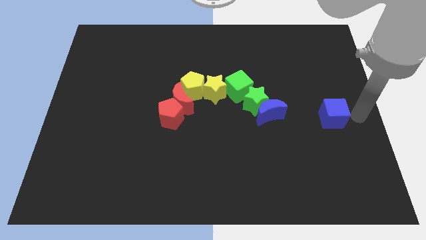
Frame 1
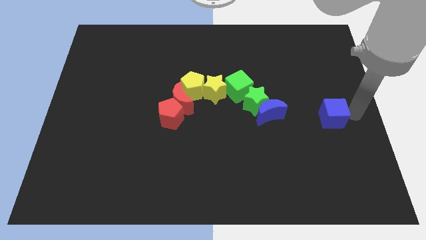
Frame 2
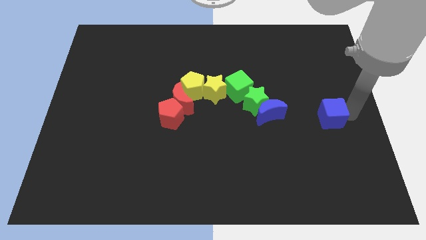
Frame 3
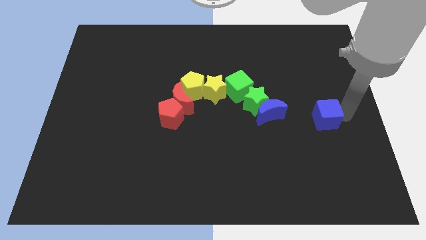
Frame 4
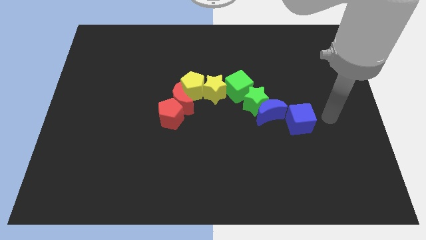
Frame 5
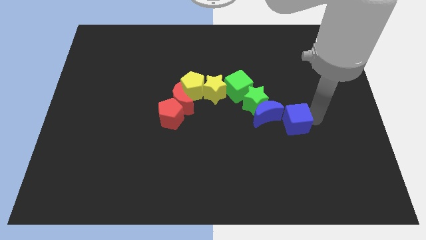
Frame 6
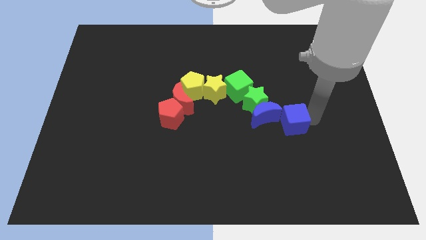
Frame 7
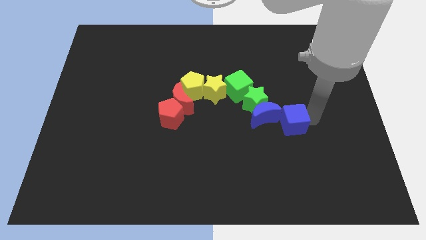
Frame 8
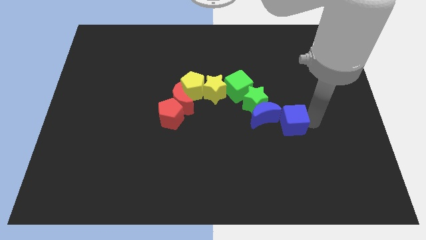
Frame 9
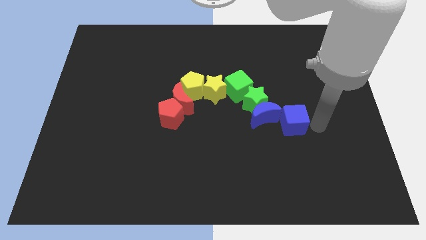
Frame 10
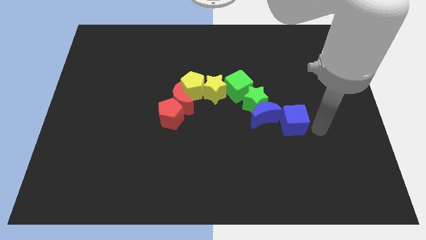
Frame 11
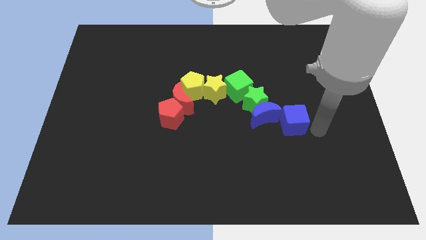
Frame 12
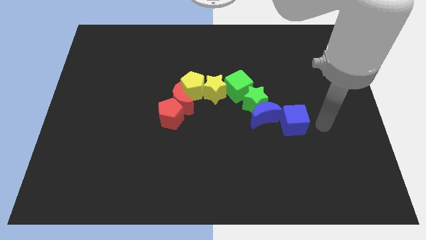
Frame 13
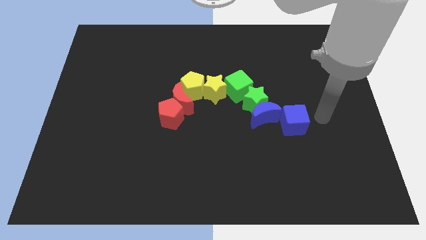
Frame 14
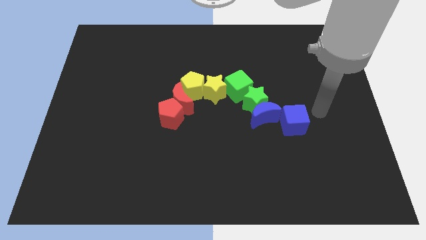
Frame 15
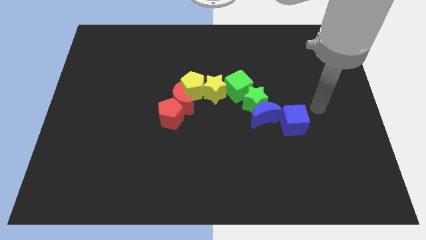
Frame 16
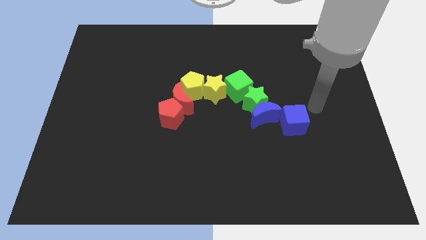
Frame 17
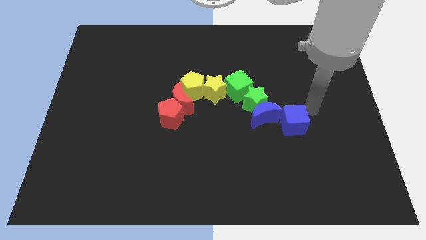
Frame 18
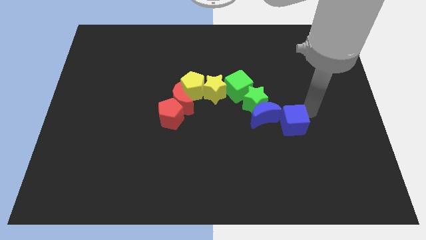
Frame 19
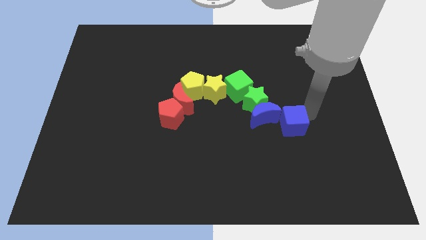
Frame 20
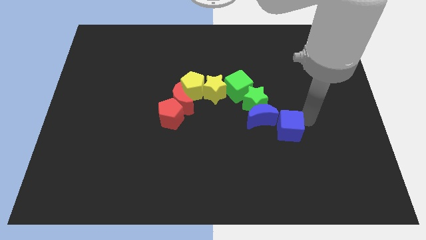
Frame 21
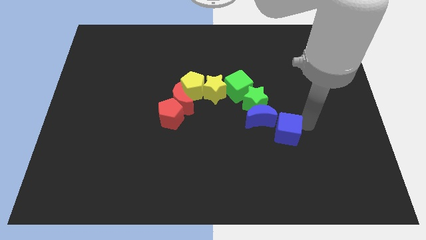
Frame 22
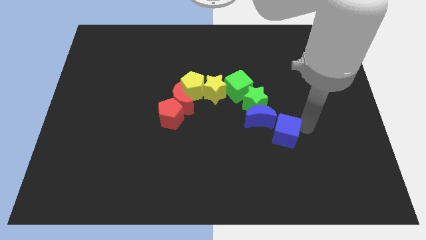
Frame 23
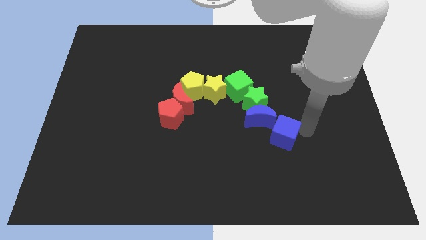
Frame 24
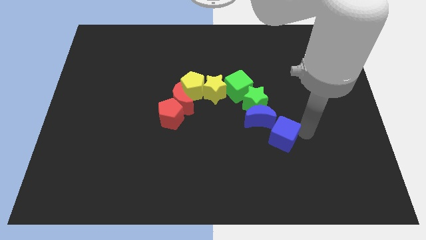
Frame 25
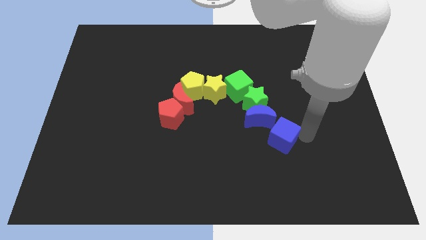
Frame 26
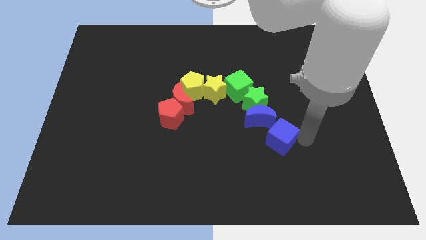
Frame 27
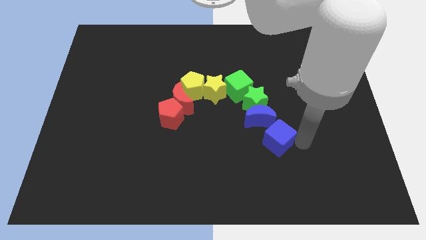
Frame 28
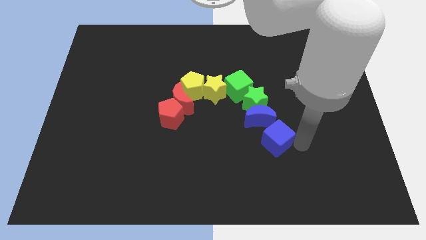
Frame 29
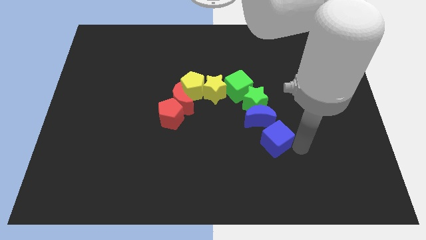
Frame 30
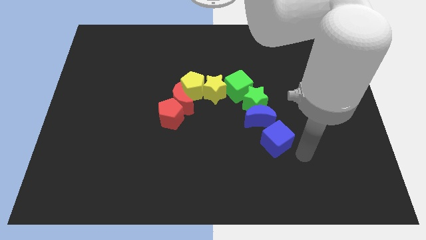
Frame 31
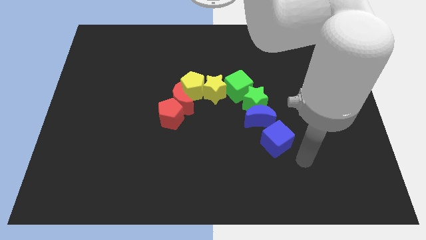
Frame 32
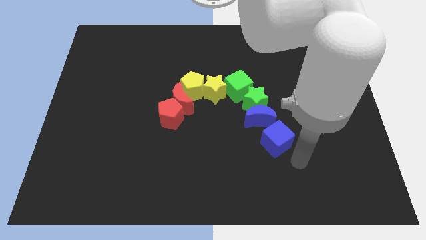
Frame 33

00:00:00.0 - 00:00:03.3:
push the blue cube below the blue crescent

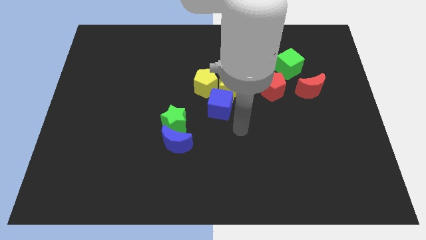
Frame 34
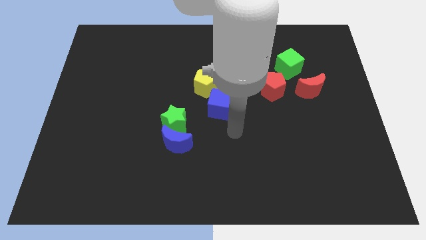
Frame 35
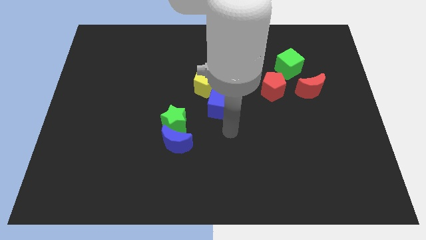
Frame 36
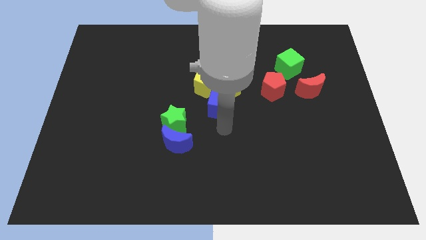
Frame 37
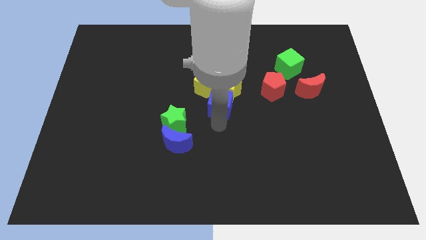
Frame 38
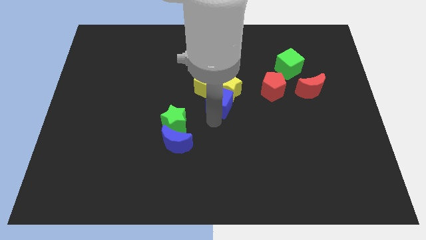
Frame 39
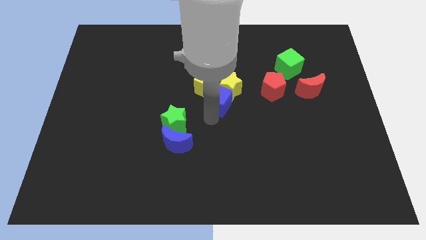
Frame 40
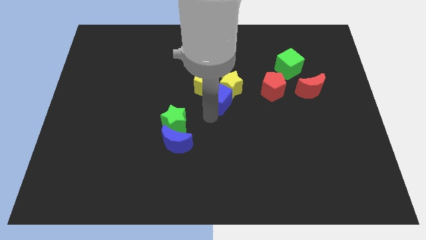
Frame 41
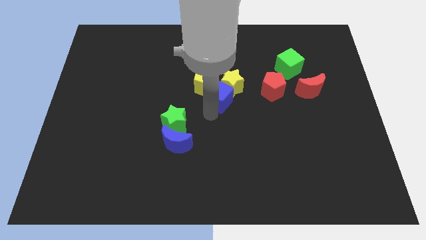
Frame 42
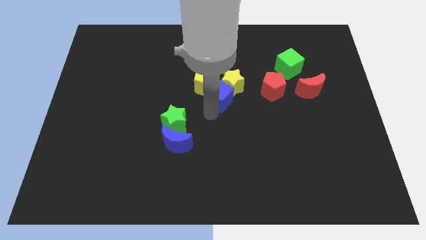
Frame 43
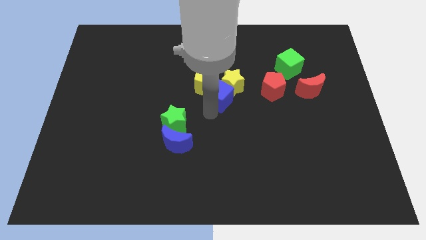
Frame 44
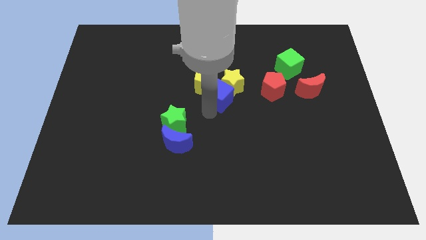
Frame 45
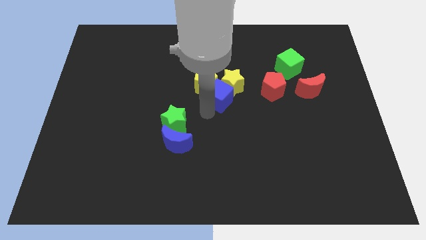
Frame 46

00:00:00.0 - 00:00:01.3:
place the blue cube into the yellow star

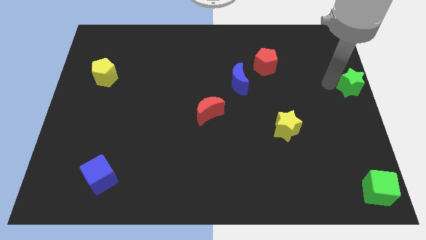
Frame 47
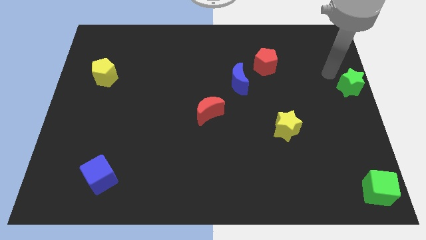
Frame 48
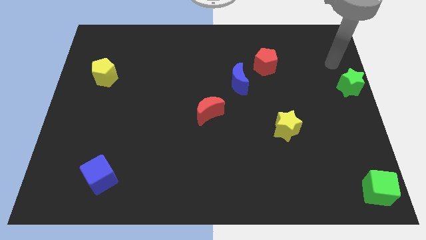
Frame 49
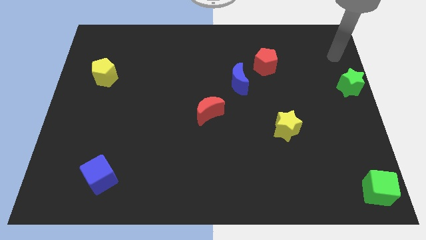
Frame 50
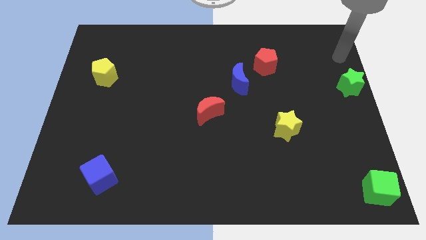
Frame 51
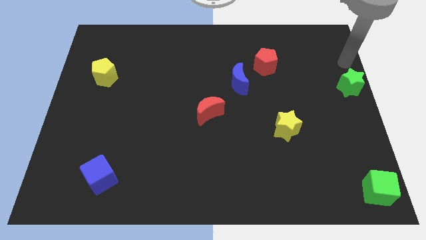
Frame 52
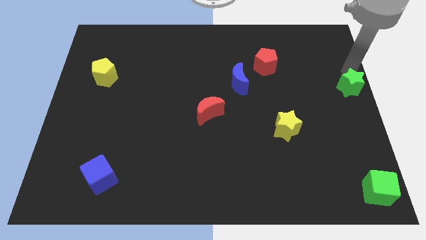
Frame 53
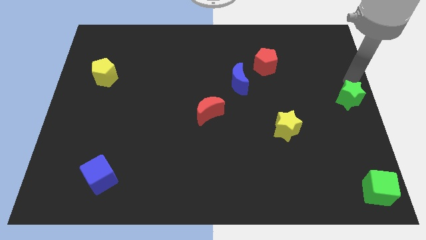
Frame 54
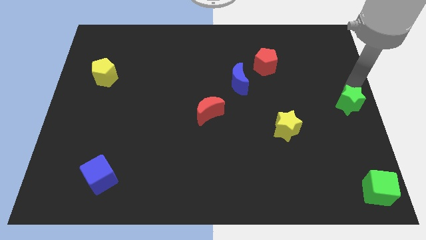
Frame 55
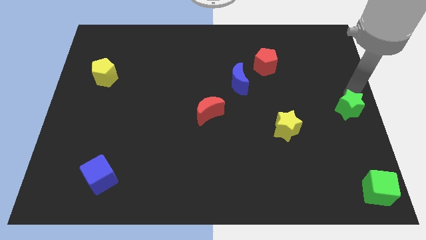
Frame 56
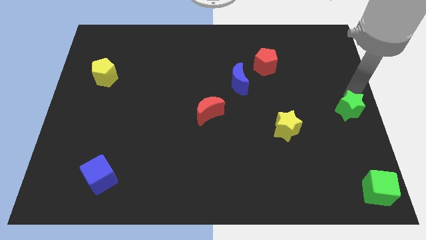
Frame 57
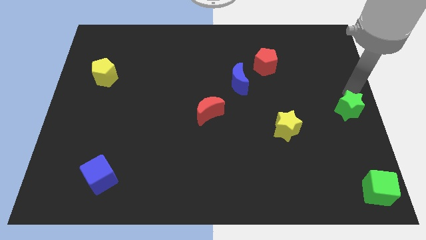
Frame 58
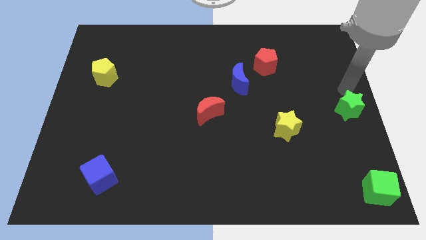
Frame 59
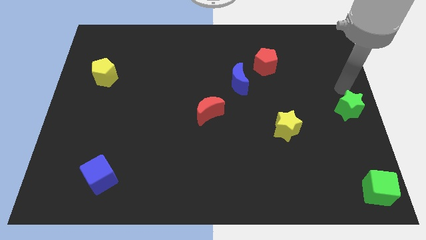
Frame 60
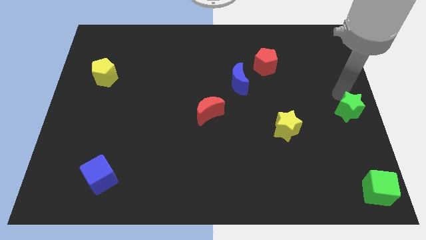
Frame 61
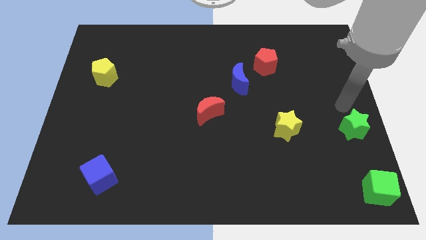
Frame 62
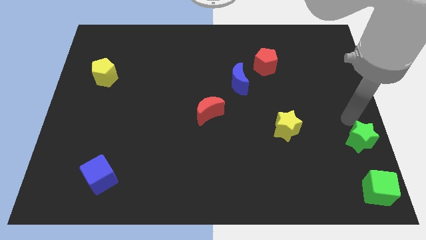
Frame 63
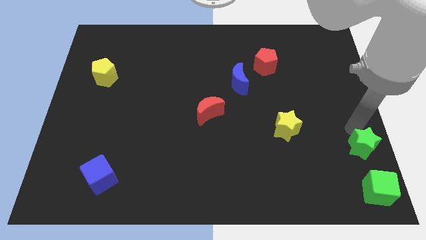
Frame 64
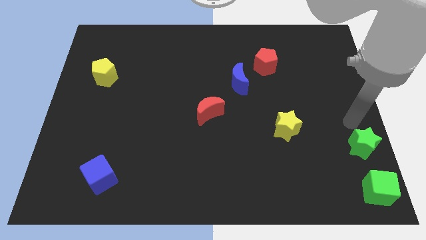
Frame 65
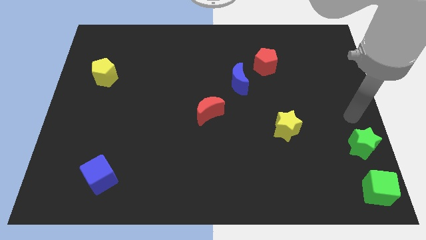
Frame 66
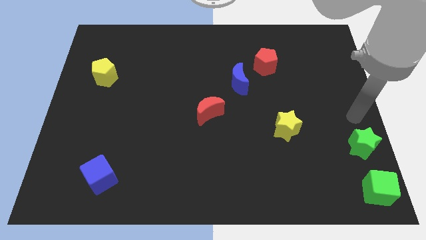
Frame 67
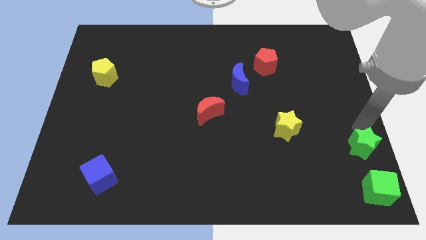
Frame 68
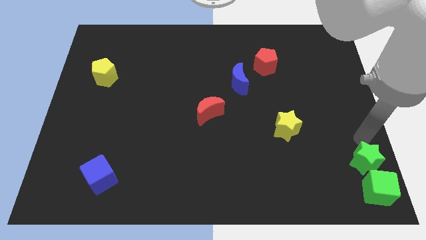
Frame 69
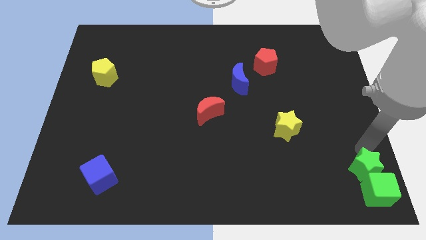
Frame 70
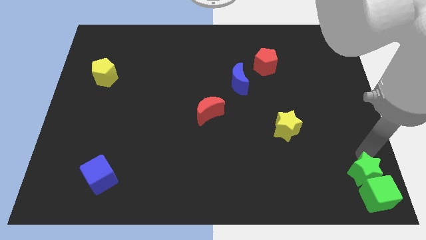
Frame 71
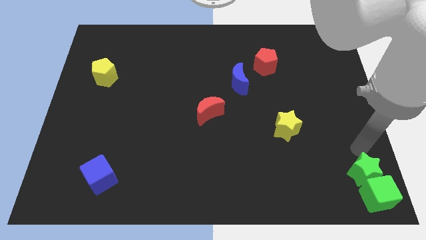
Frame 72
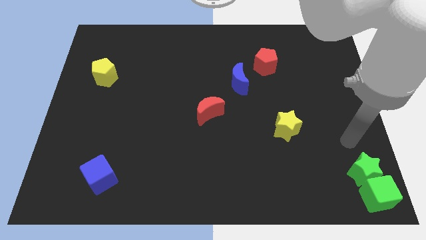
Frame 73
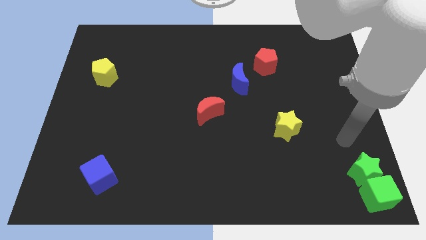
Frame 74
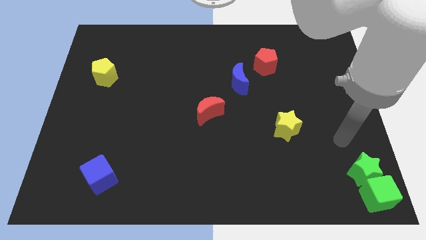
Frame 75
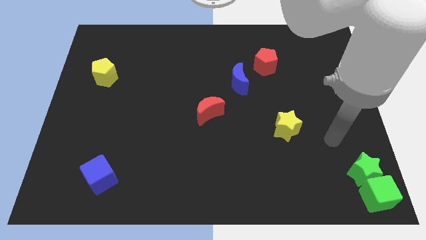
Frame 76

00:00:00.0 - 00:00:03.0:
push the green star into the green cube

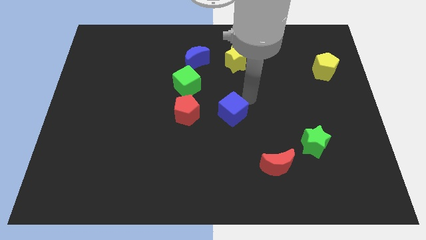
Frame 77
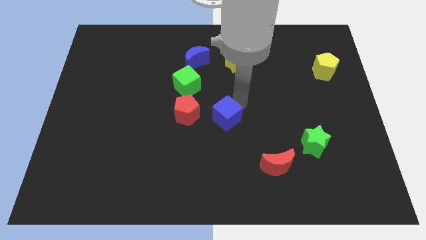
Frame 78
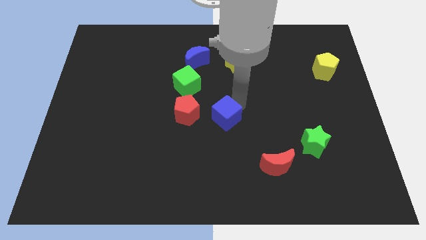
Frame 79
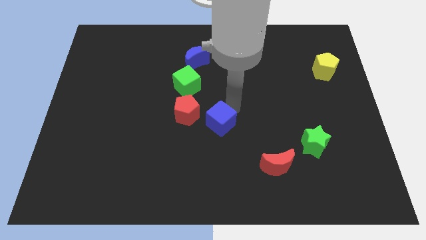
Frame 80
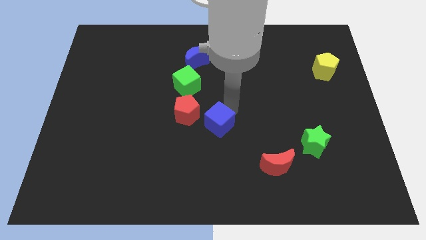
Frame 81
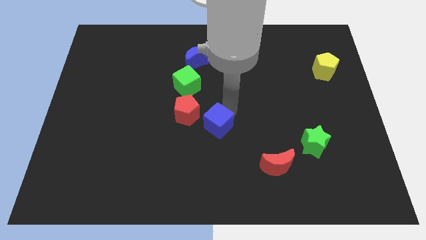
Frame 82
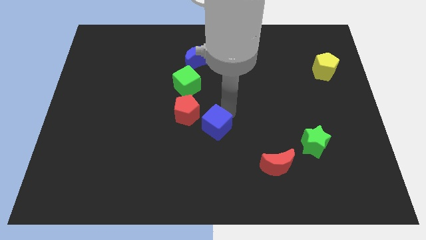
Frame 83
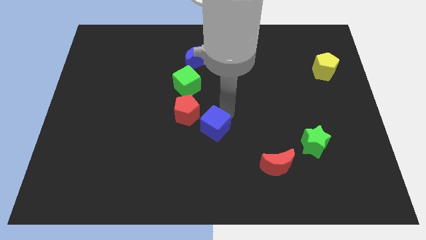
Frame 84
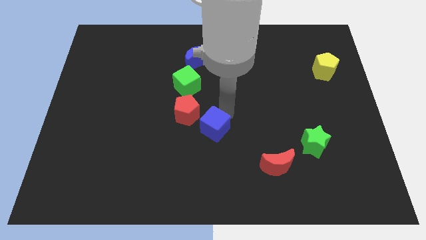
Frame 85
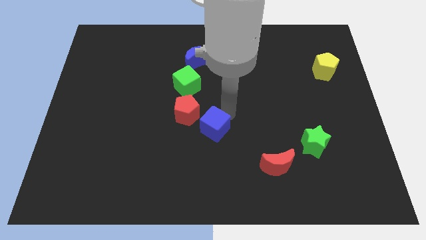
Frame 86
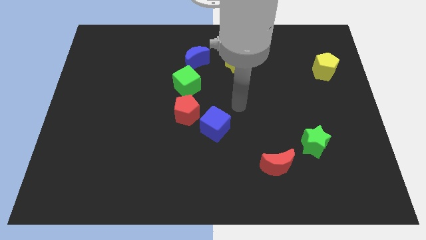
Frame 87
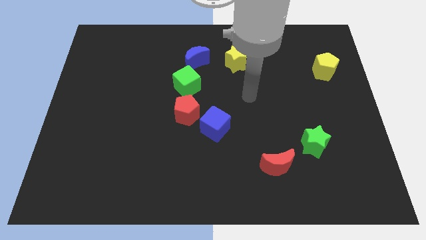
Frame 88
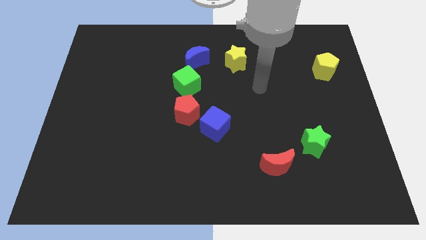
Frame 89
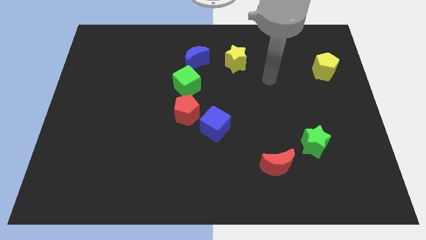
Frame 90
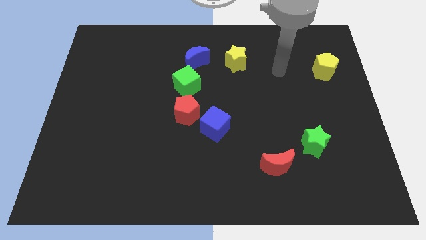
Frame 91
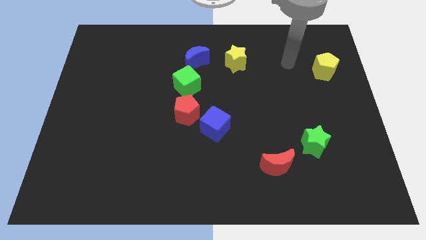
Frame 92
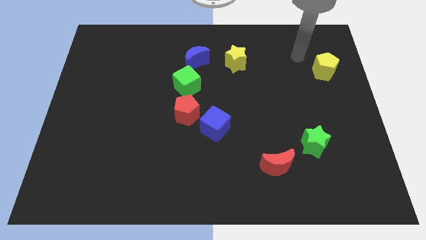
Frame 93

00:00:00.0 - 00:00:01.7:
place the blue cube diagonally top left to the red moon
